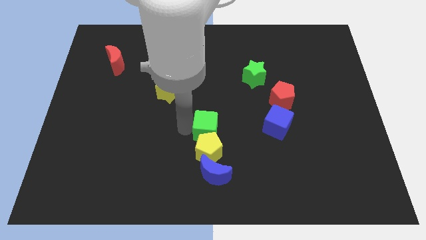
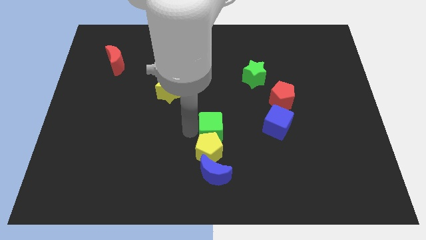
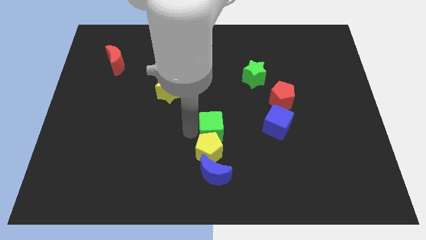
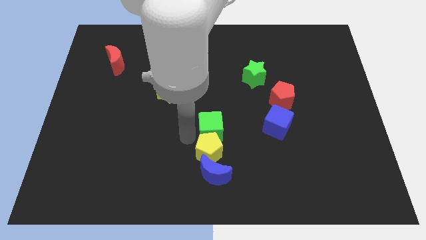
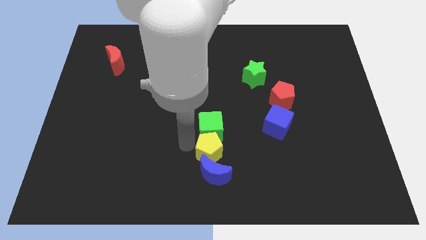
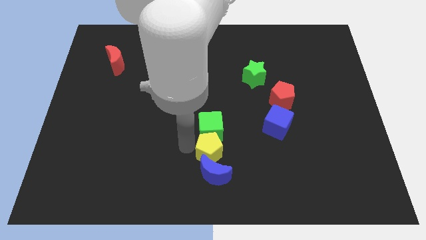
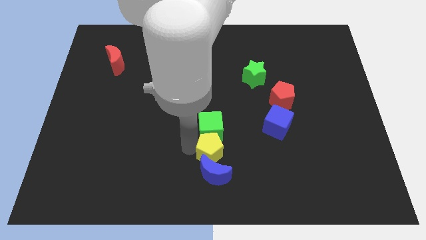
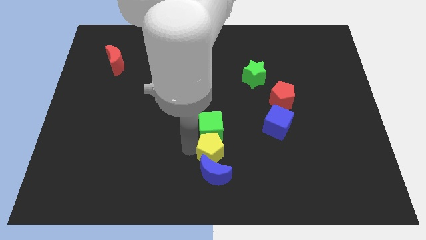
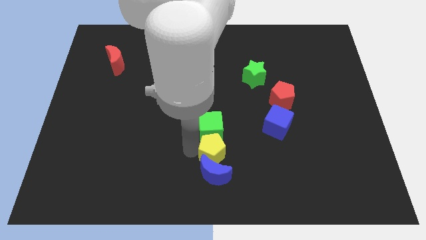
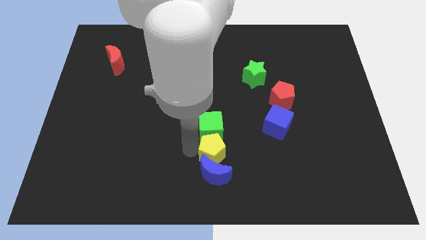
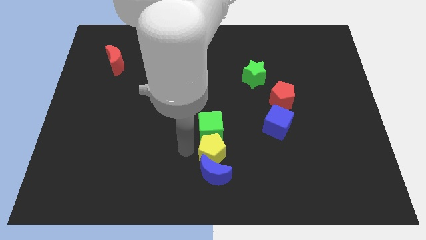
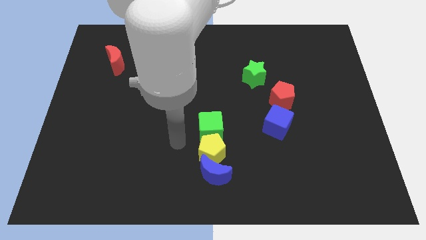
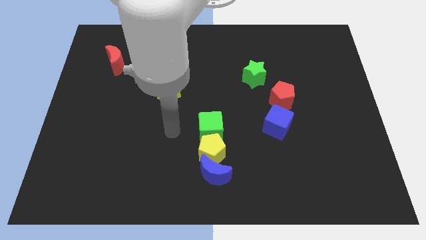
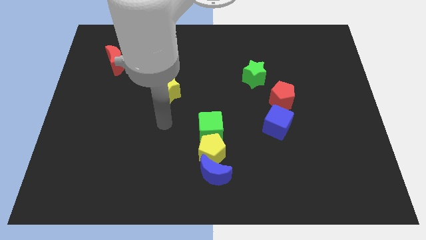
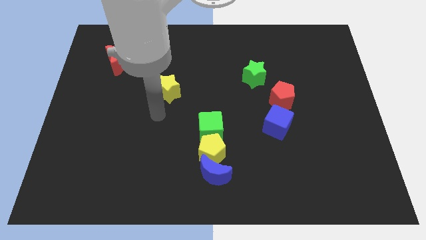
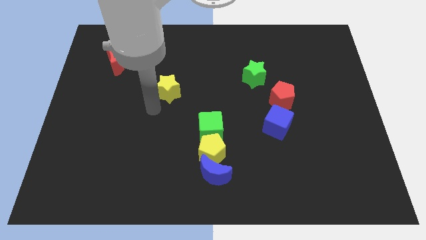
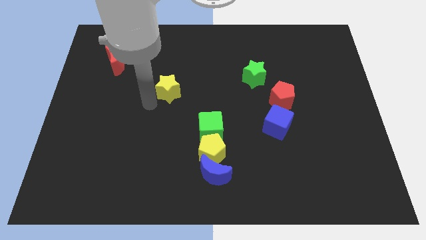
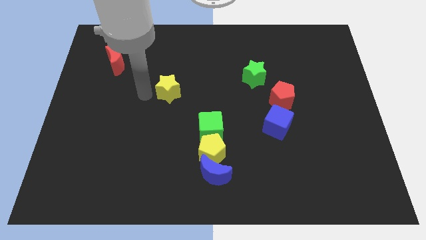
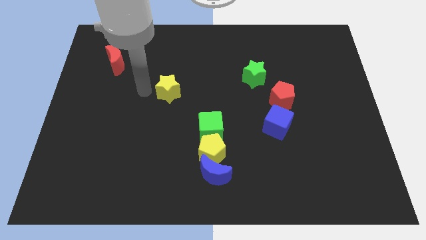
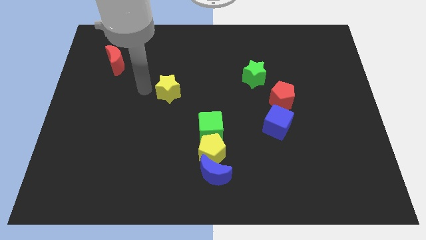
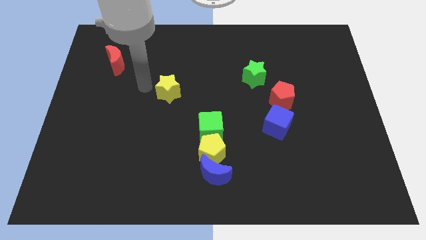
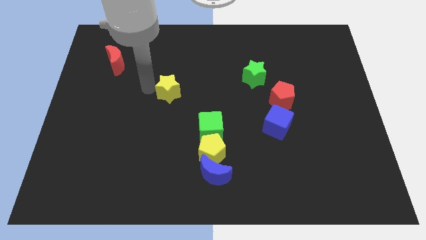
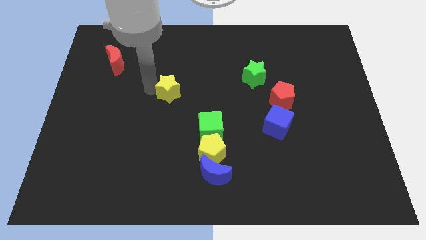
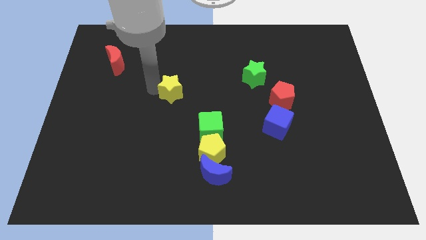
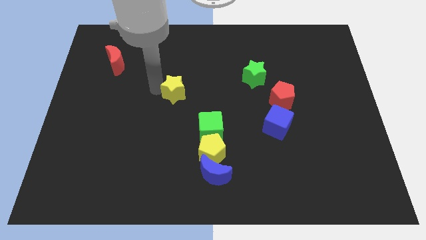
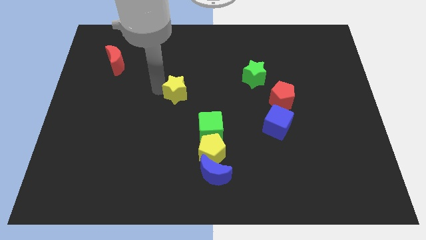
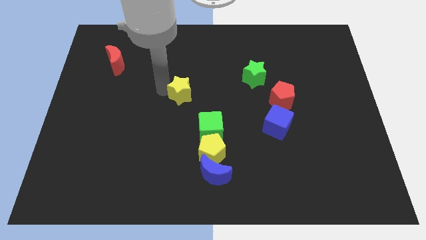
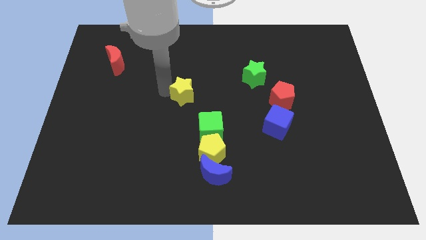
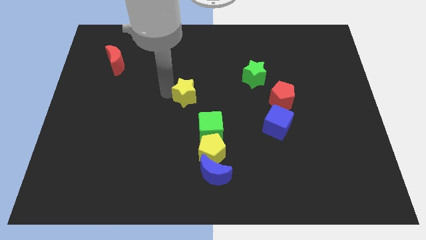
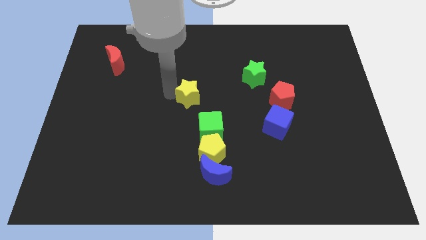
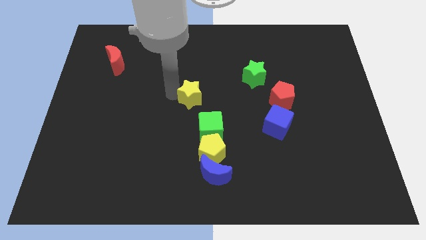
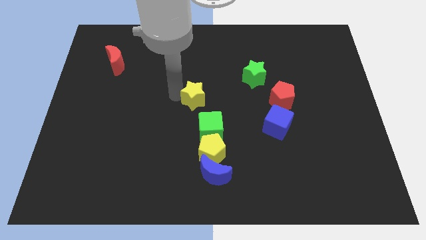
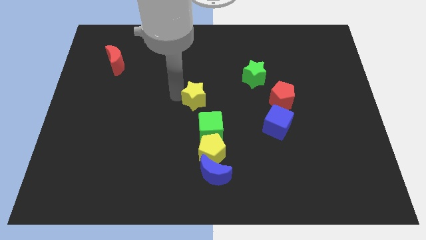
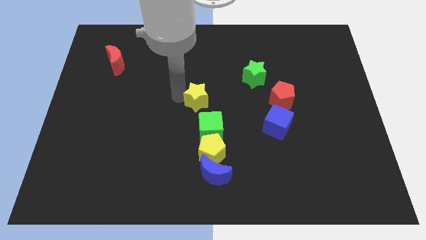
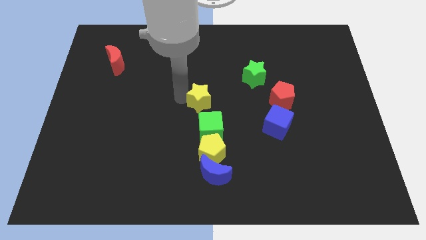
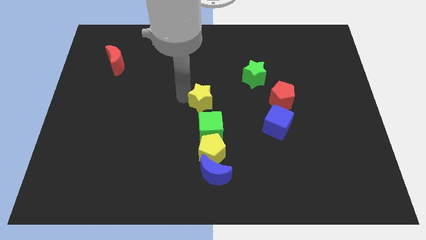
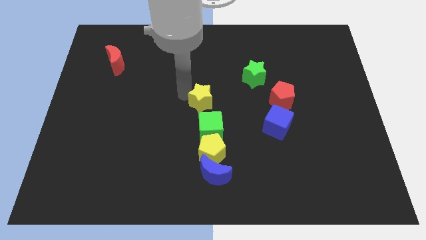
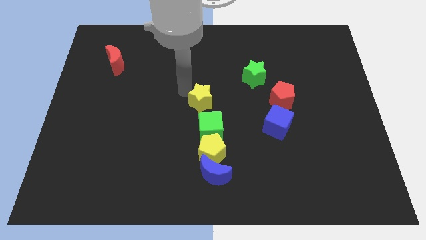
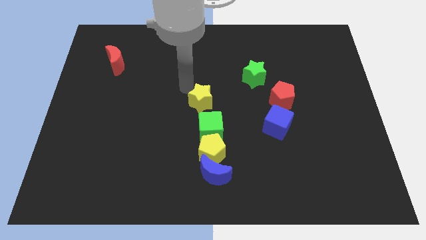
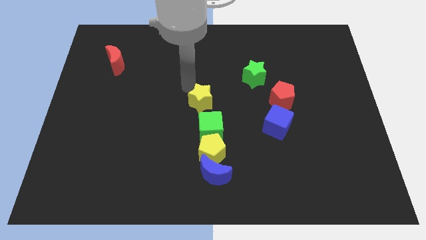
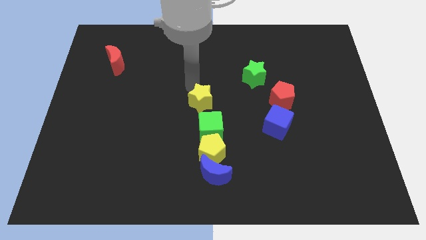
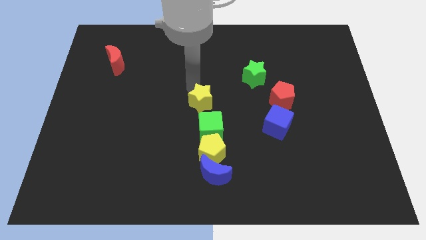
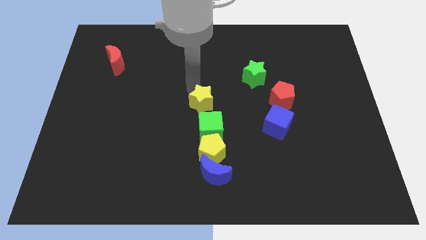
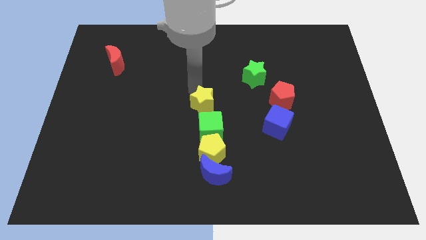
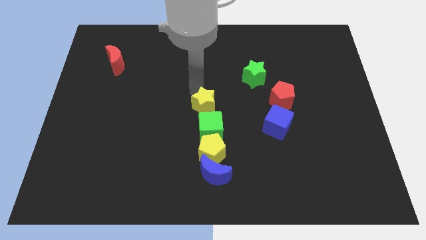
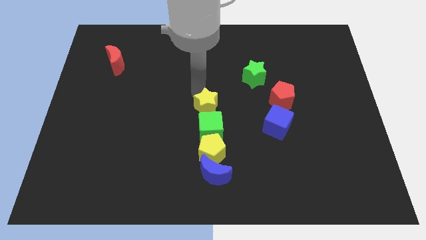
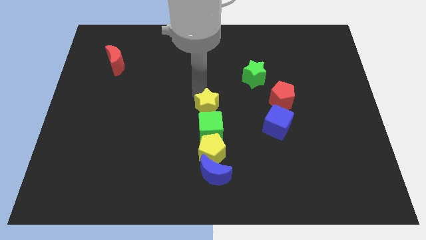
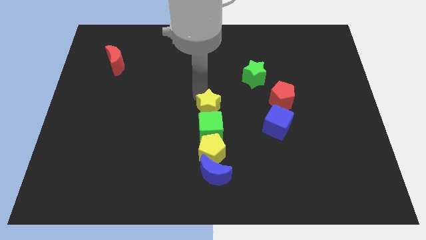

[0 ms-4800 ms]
place the yellow star above the green cube

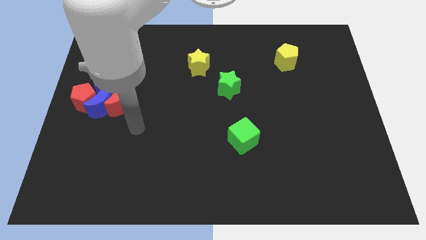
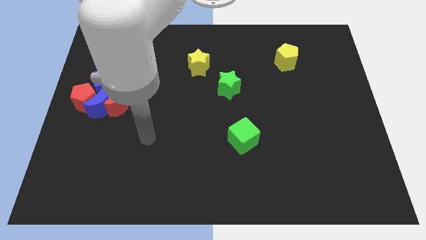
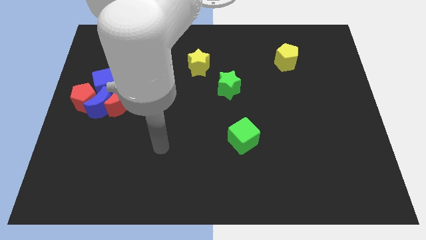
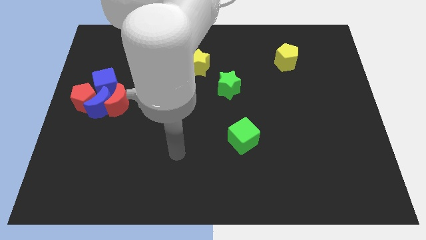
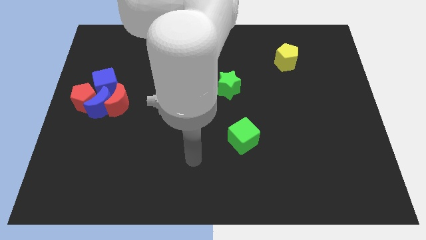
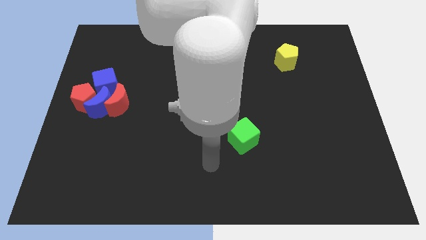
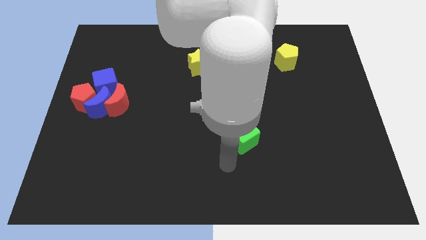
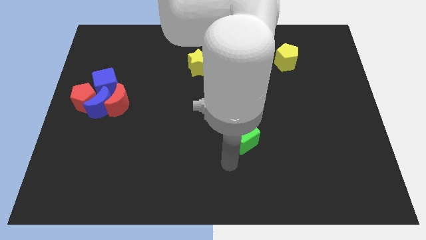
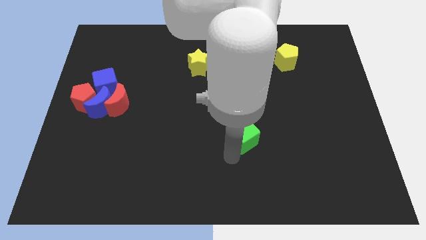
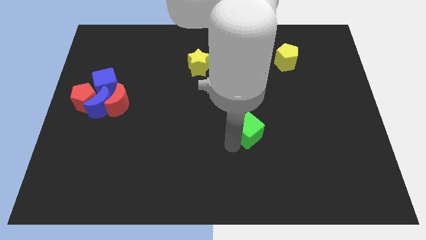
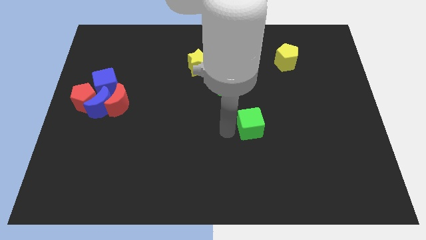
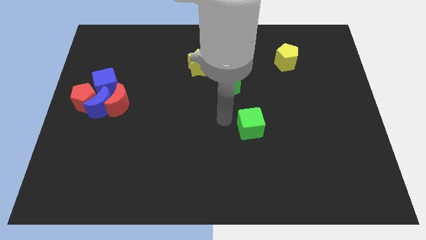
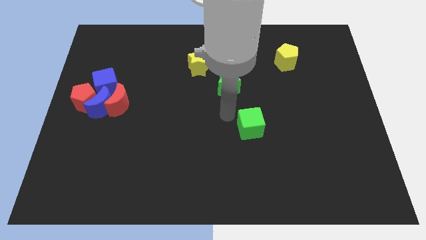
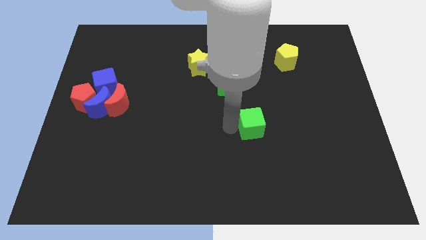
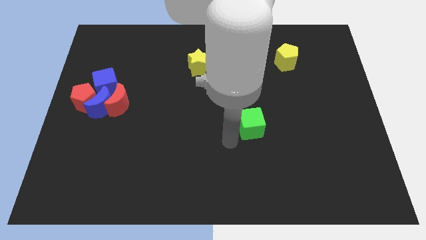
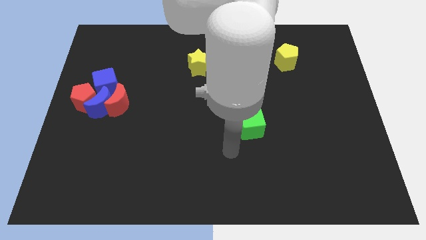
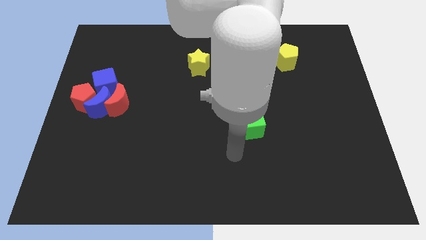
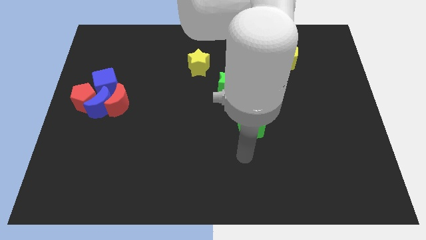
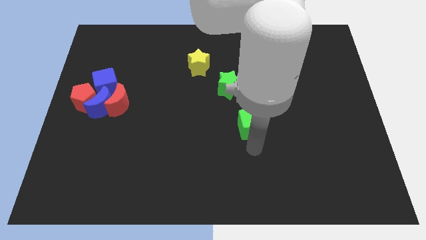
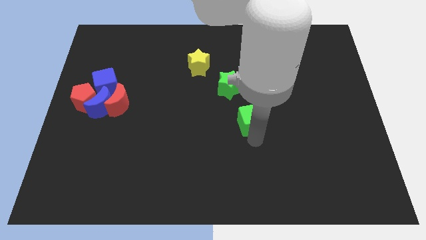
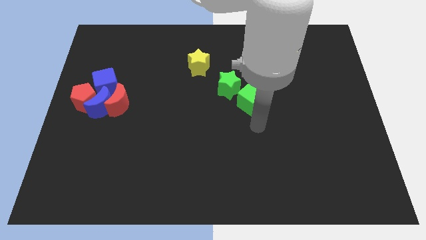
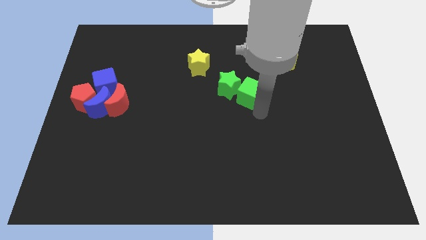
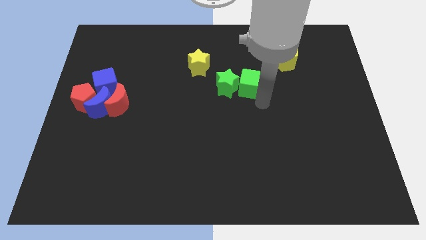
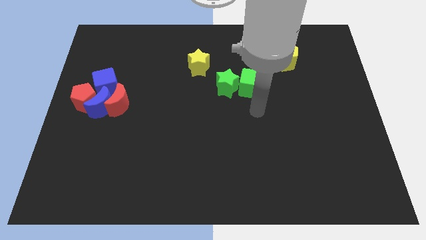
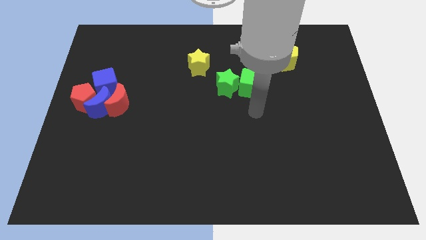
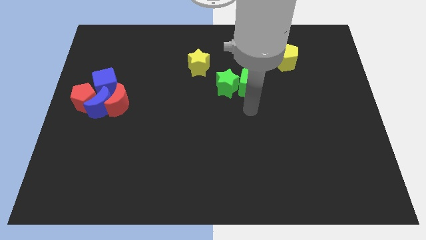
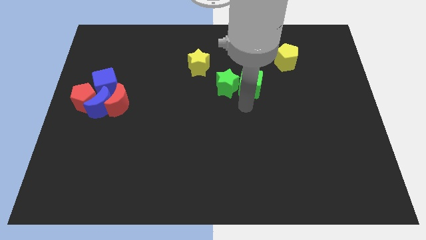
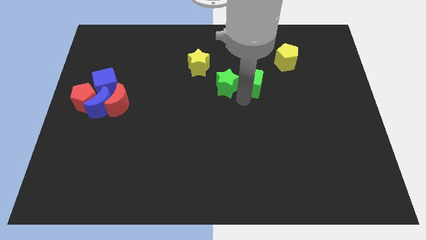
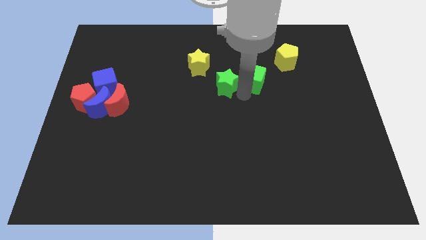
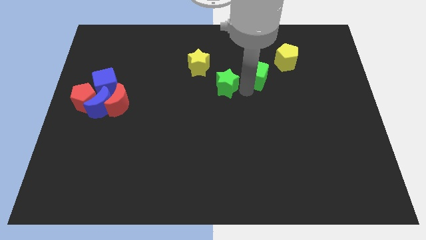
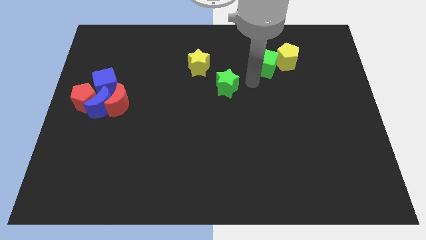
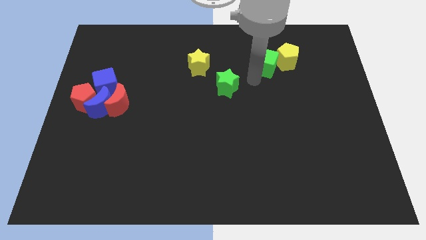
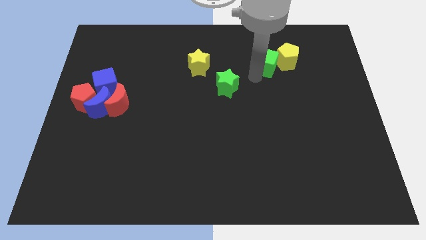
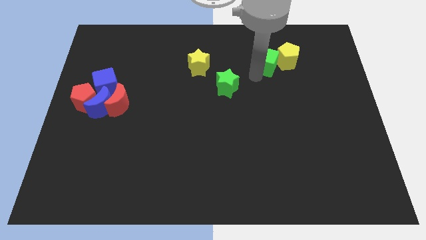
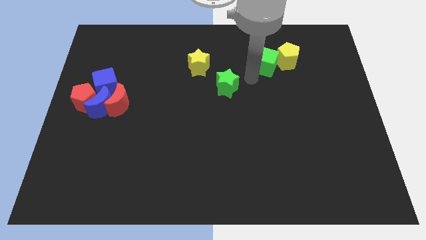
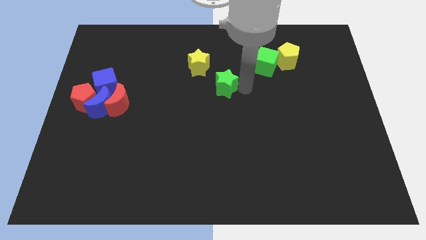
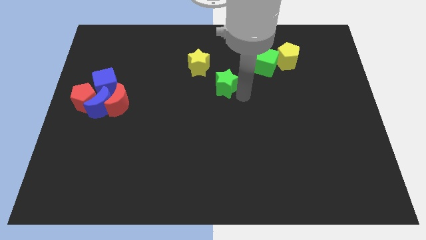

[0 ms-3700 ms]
move the green cube near to the yellow pentagon

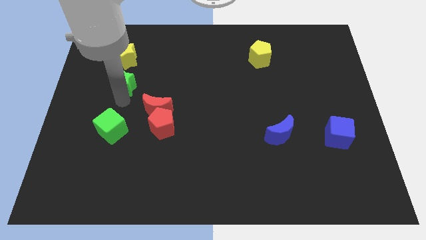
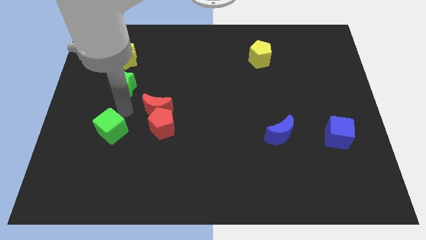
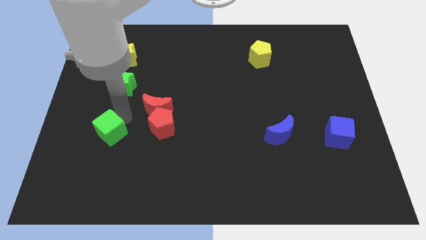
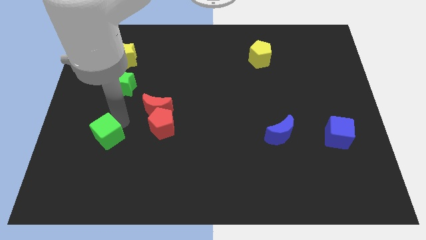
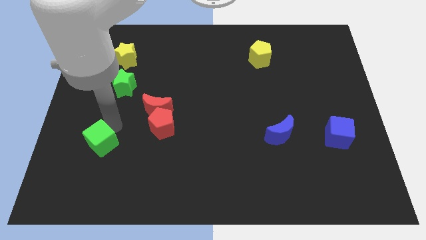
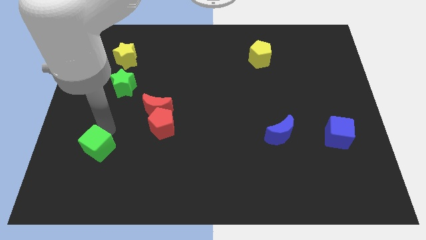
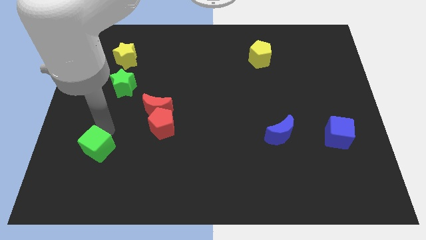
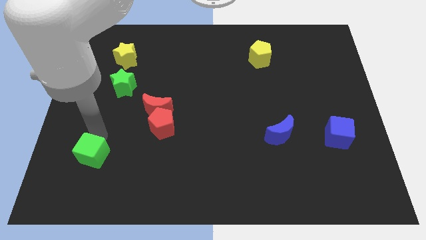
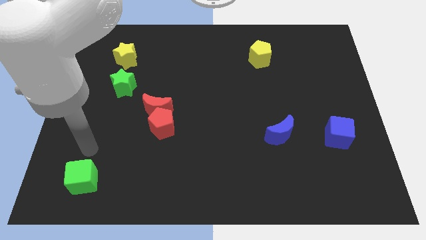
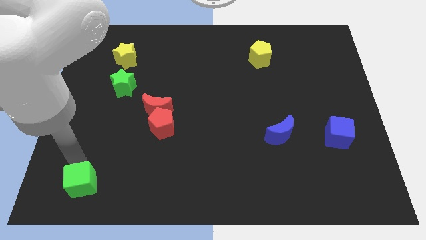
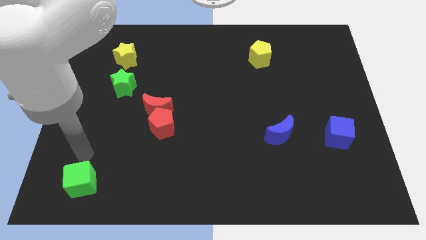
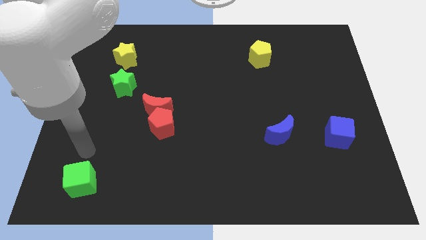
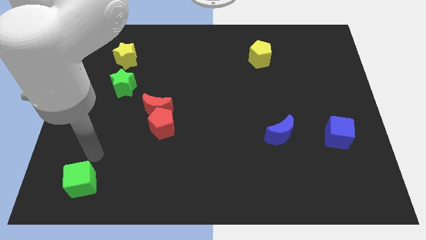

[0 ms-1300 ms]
push green cube to bottom of board
